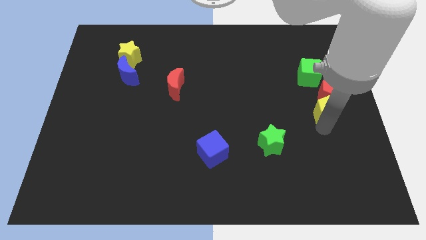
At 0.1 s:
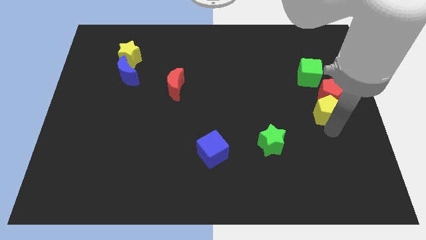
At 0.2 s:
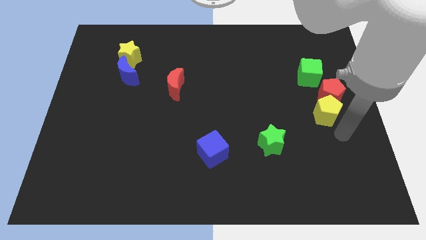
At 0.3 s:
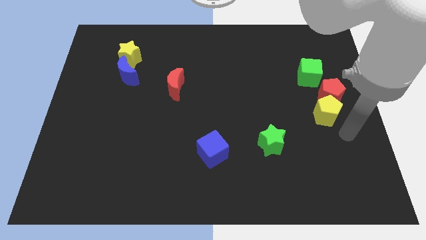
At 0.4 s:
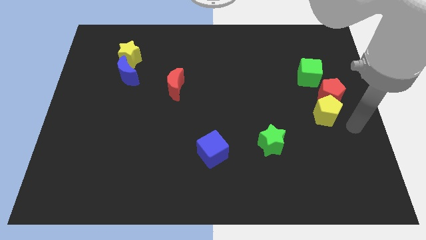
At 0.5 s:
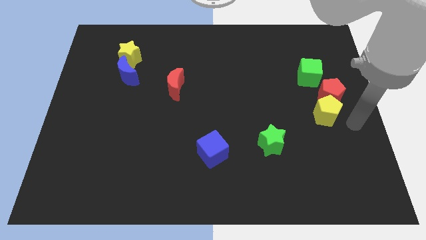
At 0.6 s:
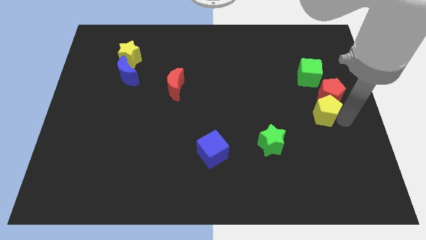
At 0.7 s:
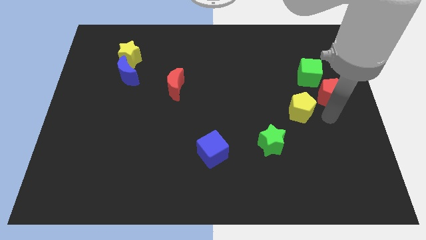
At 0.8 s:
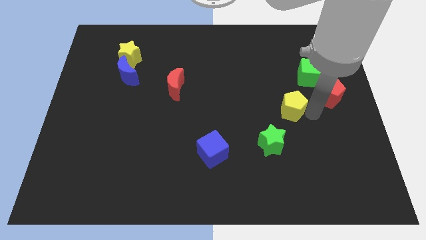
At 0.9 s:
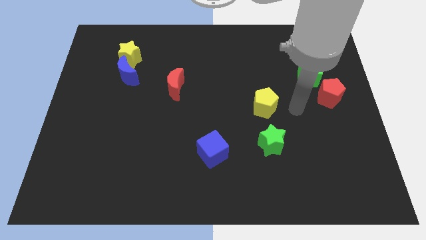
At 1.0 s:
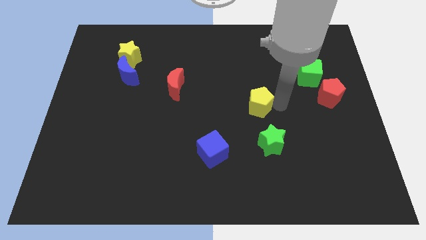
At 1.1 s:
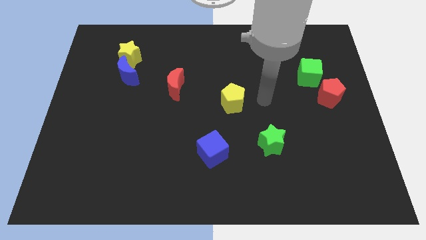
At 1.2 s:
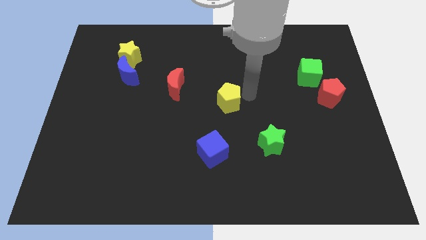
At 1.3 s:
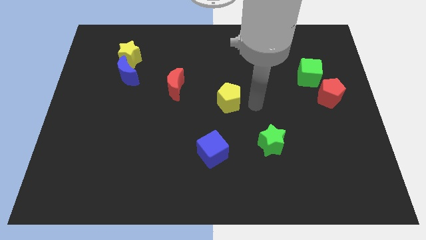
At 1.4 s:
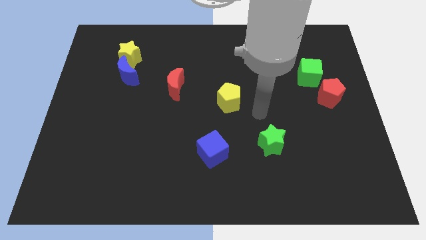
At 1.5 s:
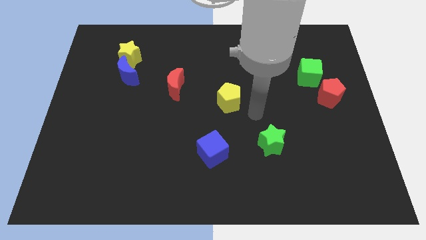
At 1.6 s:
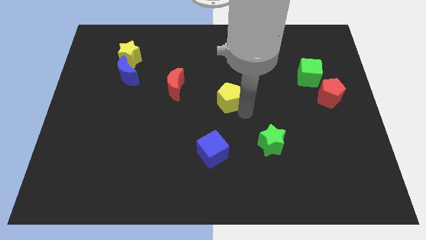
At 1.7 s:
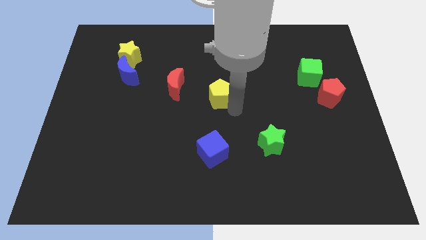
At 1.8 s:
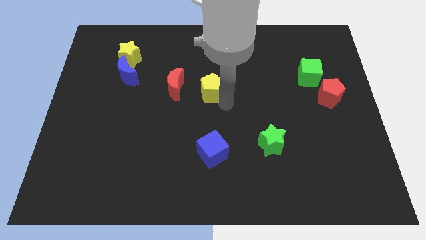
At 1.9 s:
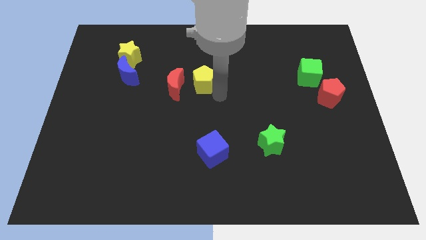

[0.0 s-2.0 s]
move the yellow pentagon right to the red crescent

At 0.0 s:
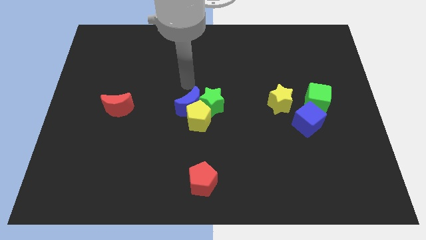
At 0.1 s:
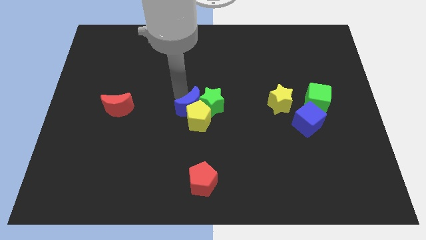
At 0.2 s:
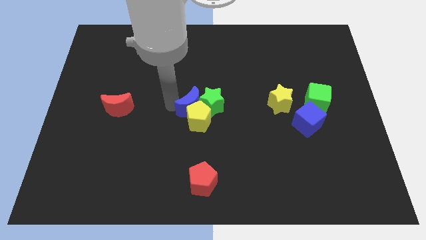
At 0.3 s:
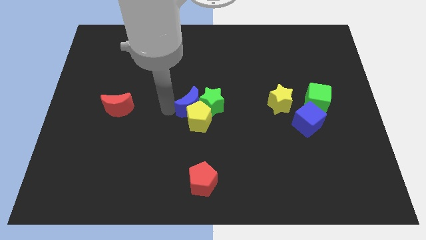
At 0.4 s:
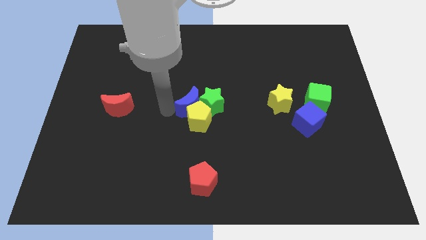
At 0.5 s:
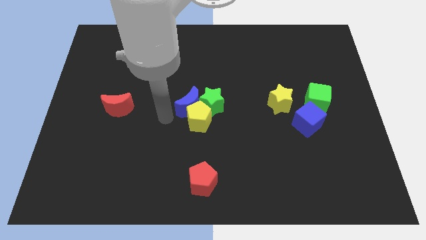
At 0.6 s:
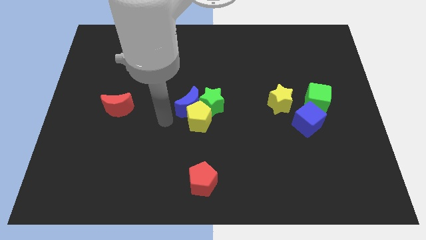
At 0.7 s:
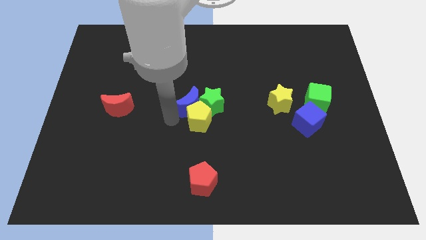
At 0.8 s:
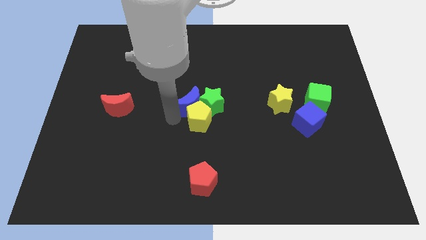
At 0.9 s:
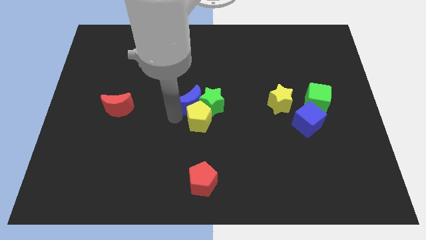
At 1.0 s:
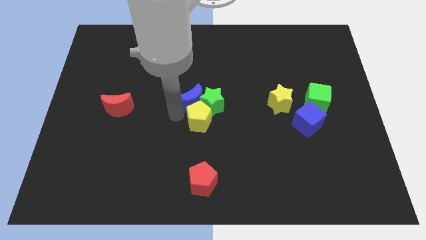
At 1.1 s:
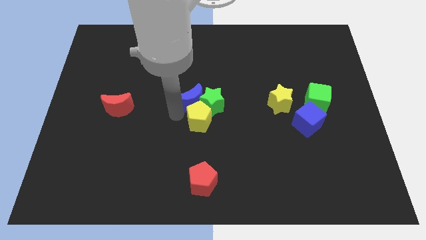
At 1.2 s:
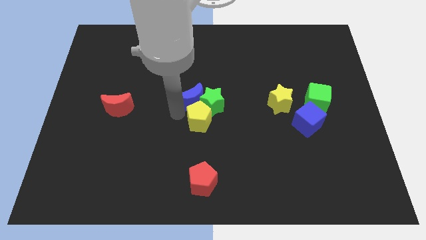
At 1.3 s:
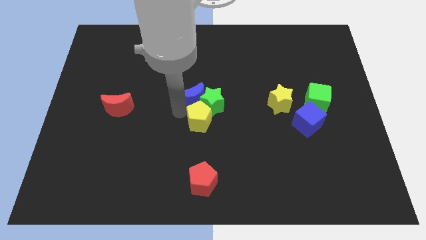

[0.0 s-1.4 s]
slightly push the blue crescent to the left of the green star

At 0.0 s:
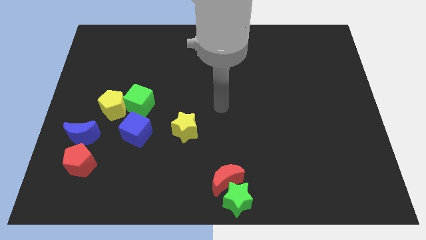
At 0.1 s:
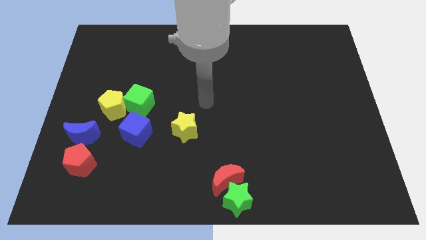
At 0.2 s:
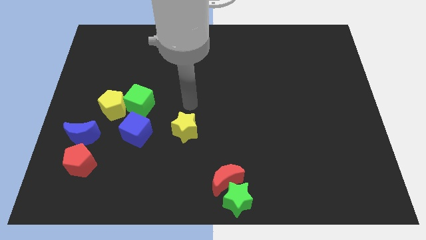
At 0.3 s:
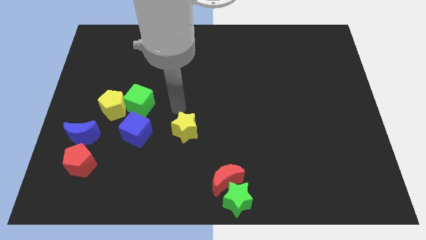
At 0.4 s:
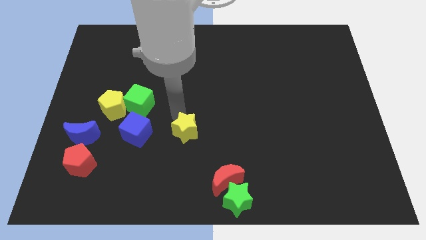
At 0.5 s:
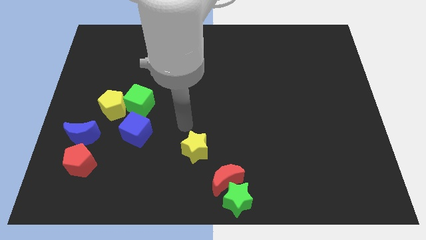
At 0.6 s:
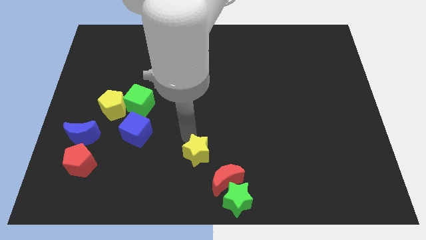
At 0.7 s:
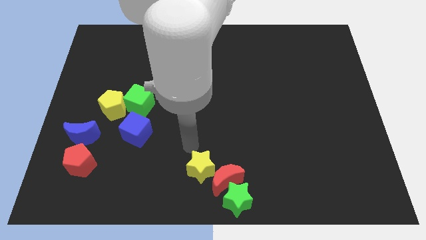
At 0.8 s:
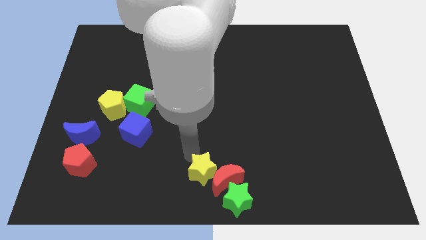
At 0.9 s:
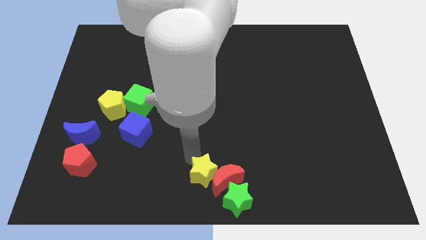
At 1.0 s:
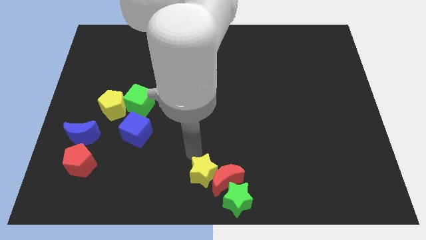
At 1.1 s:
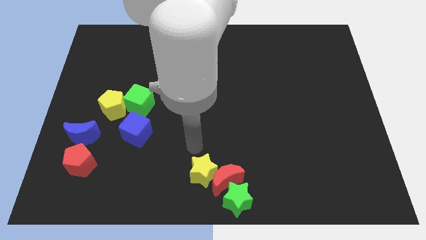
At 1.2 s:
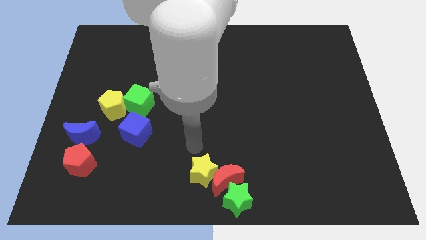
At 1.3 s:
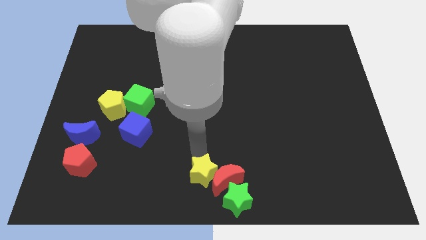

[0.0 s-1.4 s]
place yellow star near red crescent

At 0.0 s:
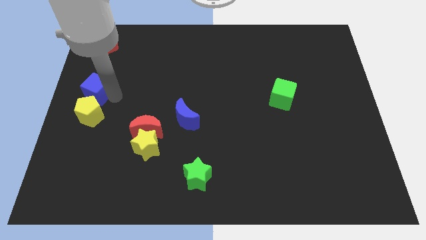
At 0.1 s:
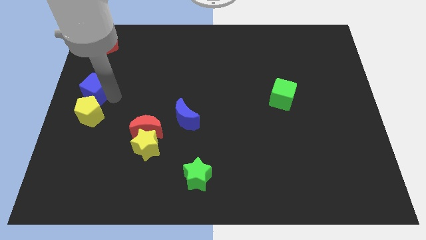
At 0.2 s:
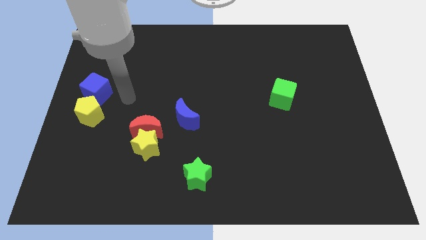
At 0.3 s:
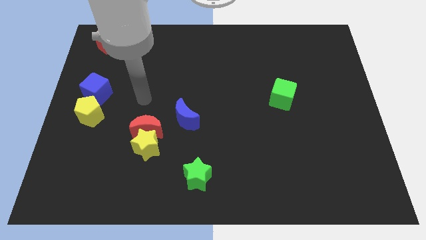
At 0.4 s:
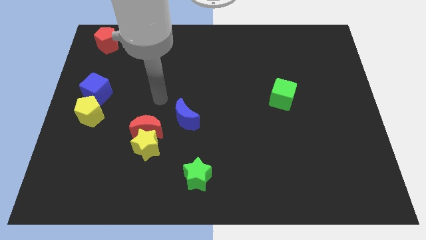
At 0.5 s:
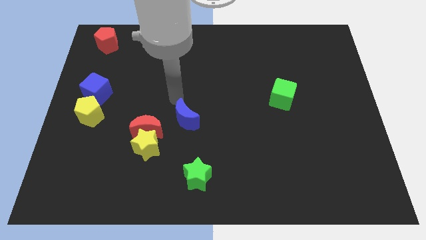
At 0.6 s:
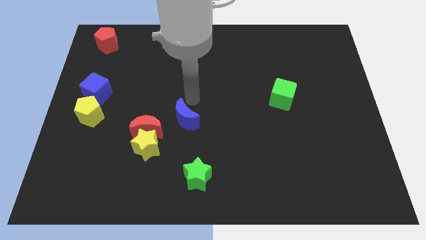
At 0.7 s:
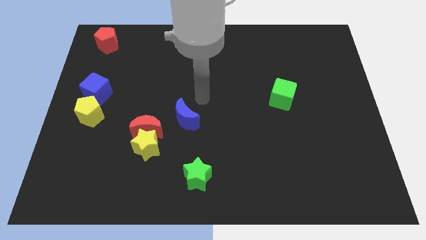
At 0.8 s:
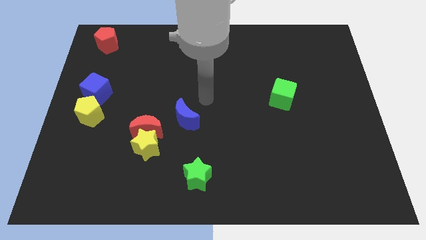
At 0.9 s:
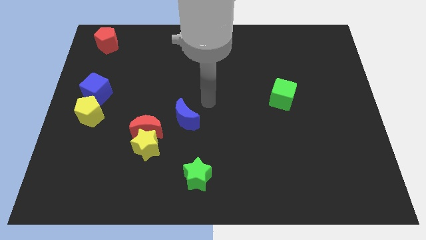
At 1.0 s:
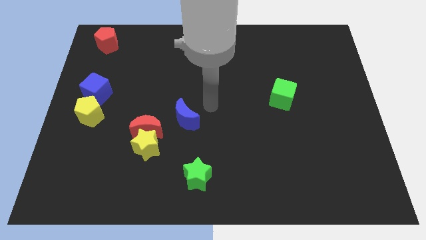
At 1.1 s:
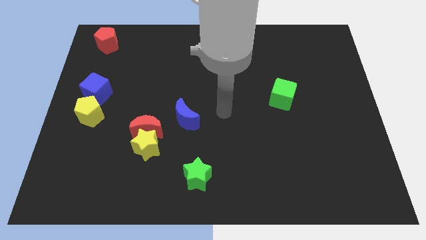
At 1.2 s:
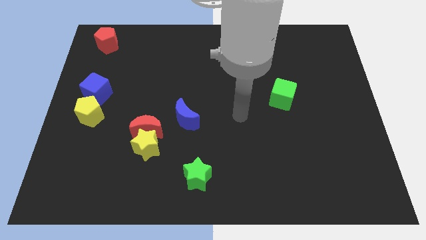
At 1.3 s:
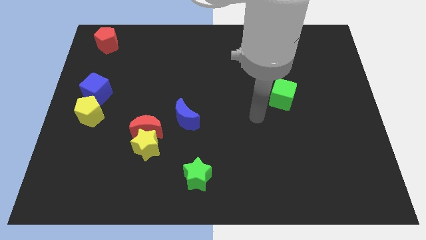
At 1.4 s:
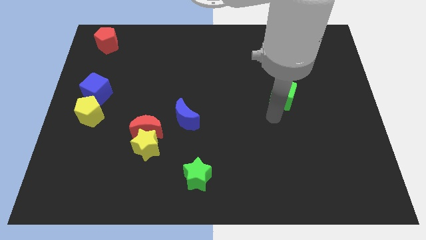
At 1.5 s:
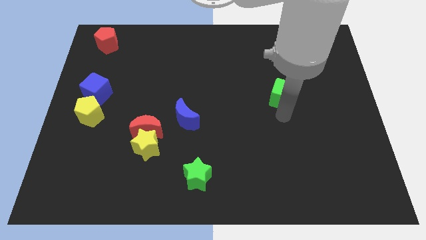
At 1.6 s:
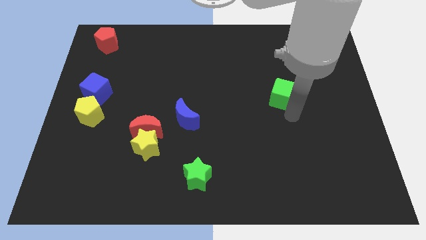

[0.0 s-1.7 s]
point your hand below the green cube

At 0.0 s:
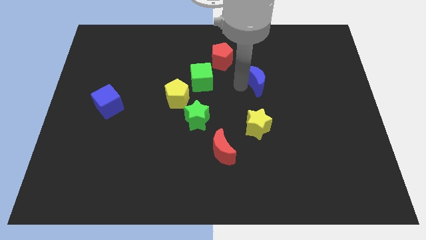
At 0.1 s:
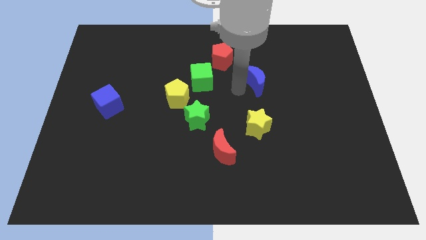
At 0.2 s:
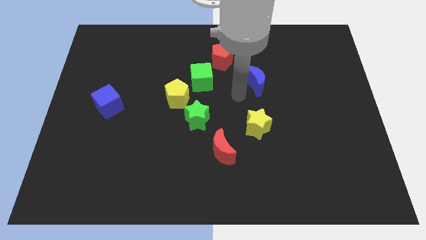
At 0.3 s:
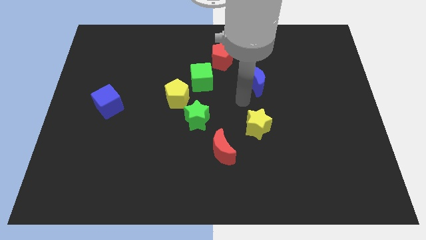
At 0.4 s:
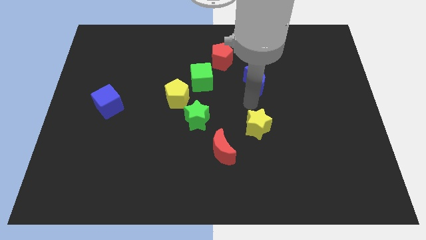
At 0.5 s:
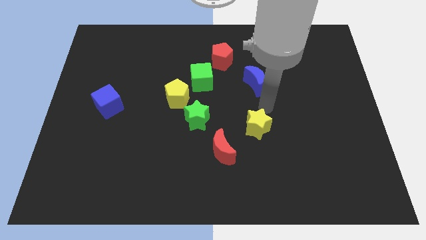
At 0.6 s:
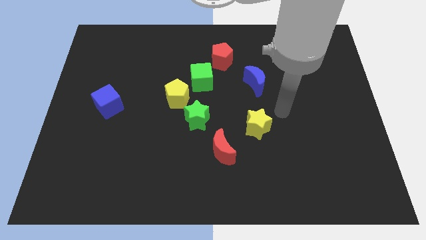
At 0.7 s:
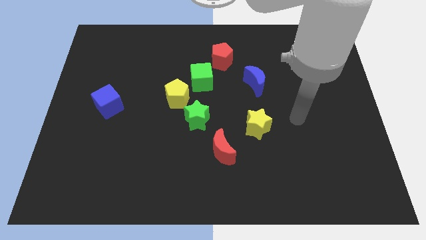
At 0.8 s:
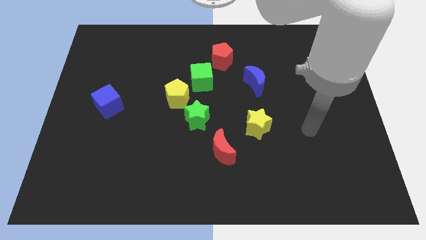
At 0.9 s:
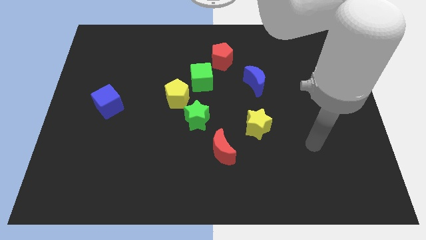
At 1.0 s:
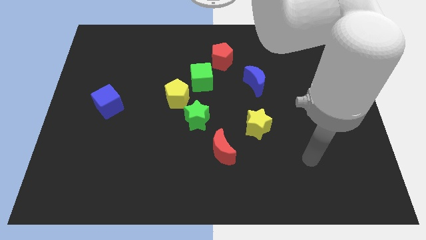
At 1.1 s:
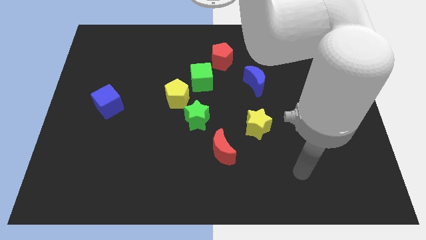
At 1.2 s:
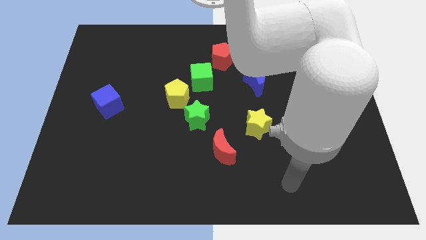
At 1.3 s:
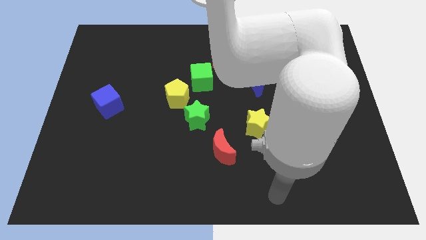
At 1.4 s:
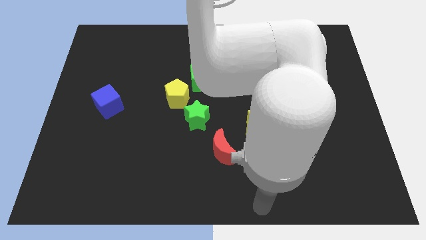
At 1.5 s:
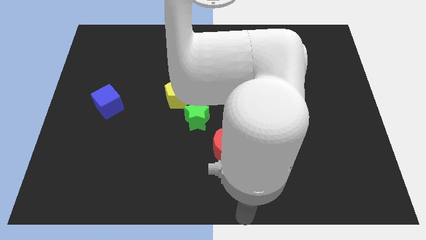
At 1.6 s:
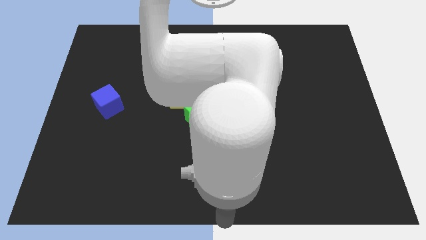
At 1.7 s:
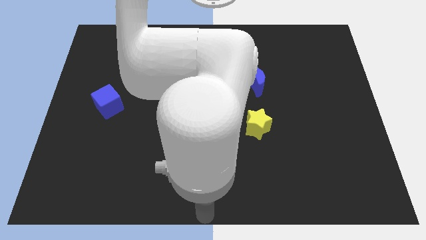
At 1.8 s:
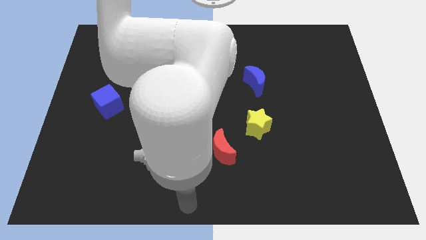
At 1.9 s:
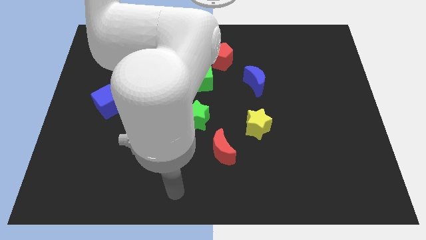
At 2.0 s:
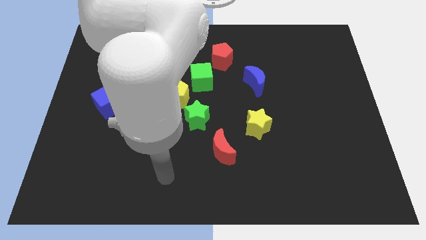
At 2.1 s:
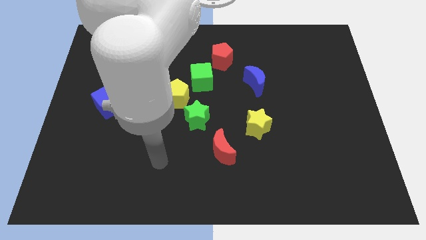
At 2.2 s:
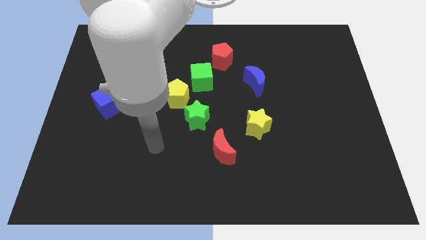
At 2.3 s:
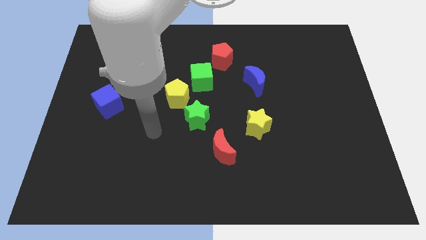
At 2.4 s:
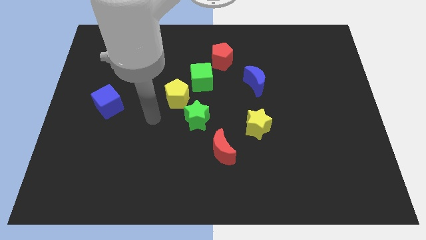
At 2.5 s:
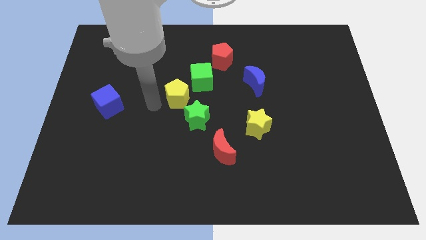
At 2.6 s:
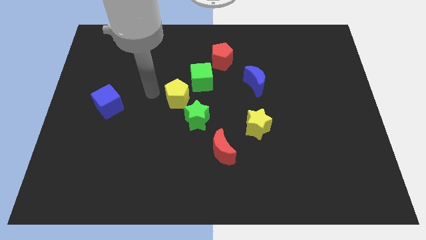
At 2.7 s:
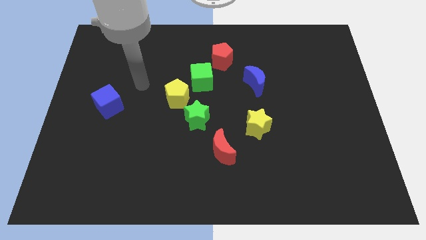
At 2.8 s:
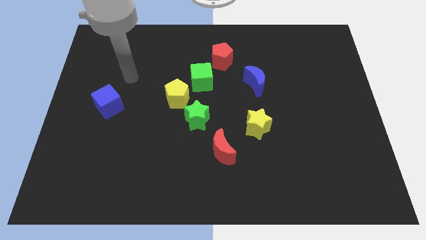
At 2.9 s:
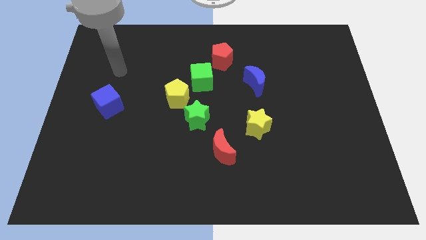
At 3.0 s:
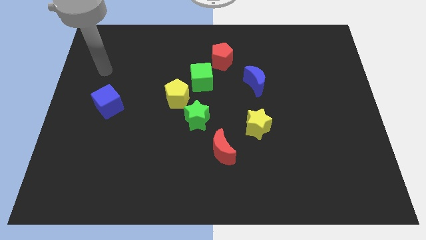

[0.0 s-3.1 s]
move your arm away from blue moon
